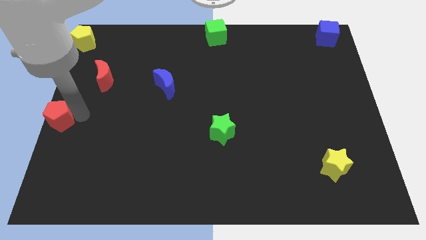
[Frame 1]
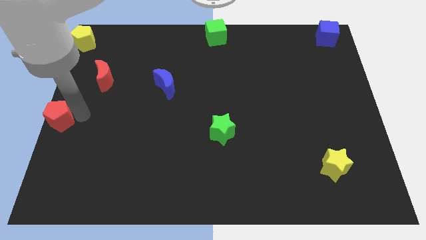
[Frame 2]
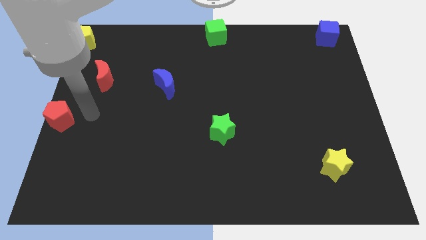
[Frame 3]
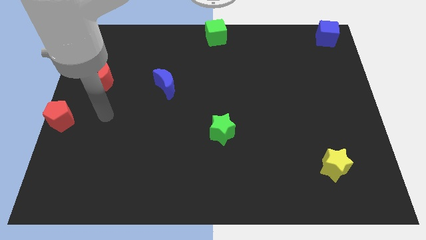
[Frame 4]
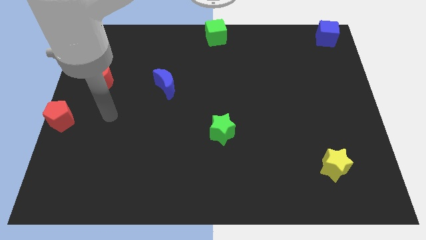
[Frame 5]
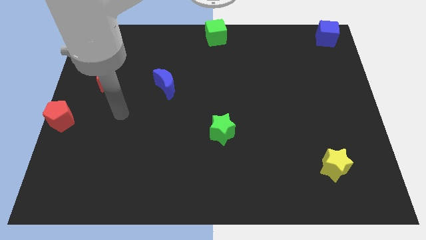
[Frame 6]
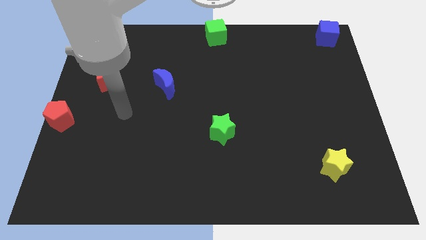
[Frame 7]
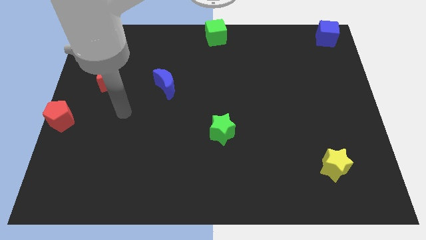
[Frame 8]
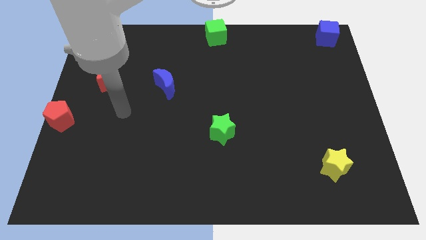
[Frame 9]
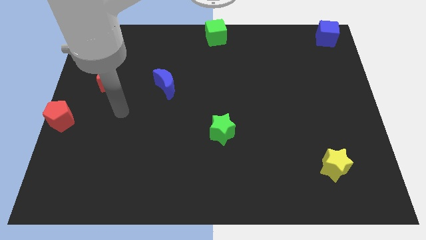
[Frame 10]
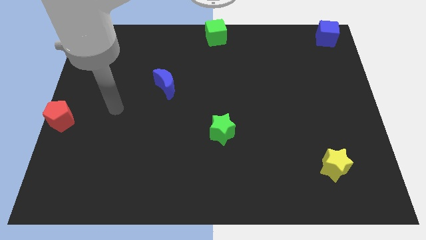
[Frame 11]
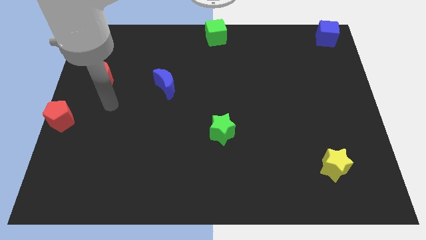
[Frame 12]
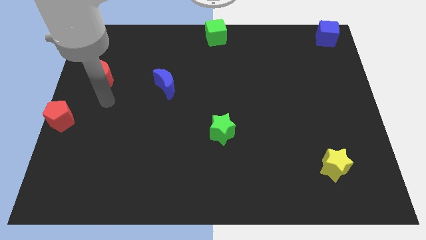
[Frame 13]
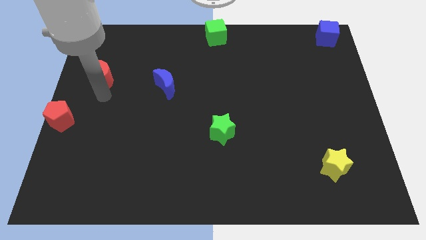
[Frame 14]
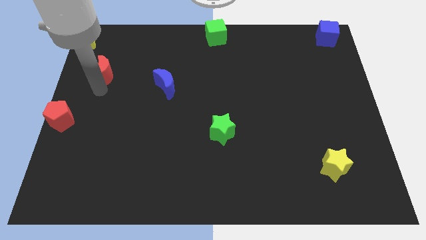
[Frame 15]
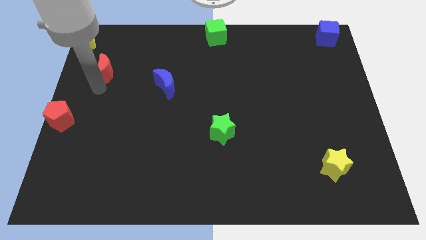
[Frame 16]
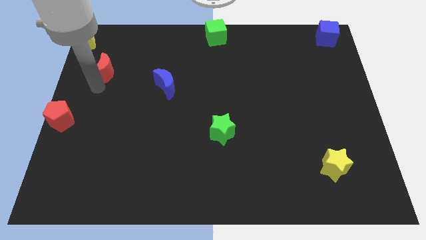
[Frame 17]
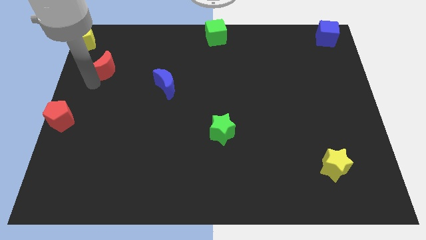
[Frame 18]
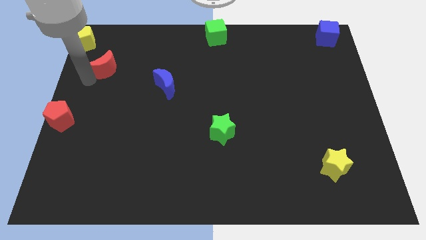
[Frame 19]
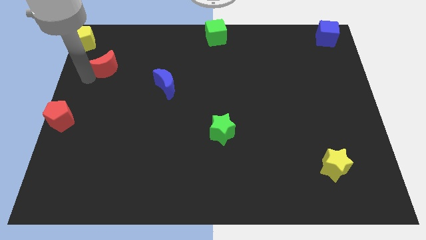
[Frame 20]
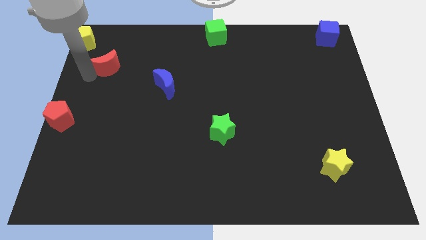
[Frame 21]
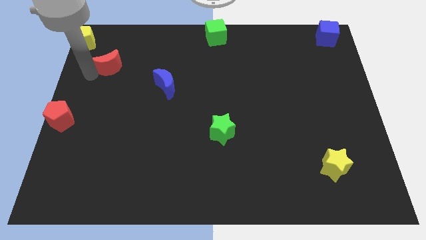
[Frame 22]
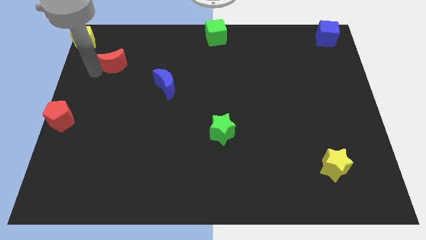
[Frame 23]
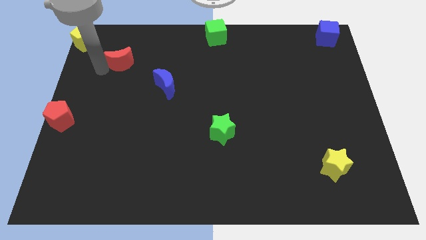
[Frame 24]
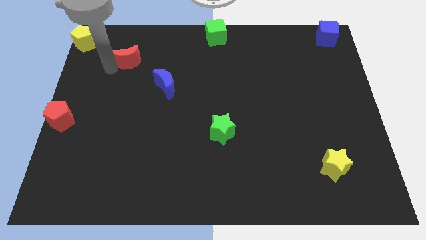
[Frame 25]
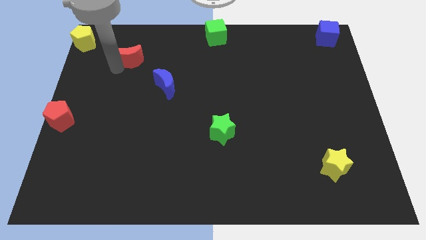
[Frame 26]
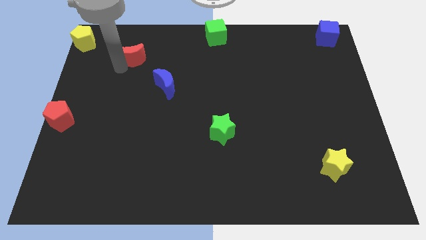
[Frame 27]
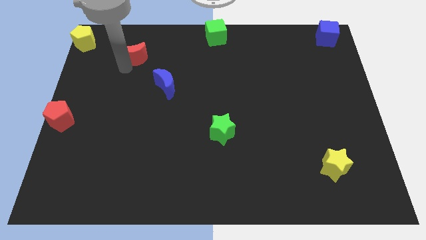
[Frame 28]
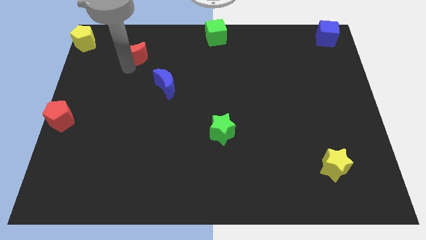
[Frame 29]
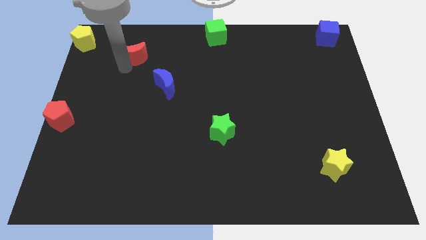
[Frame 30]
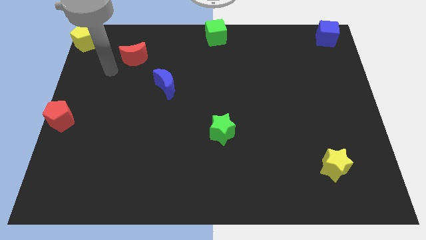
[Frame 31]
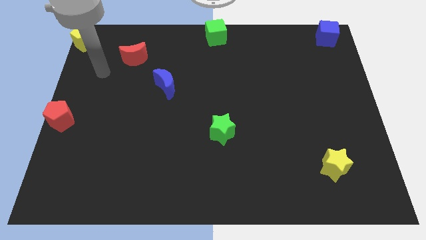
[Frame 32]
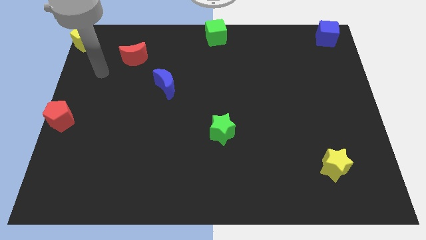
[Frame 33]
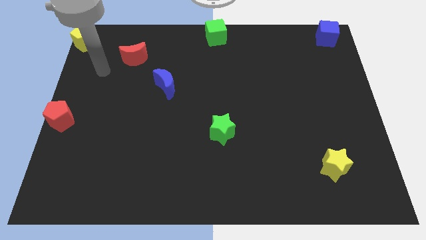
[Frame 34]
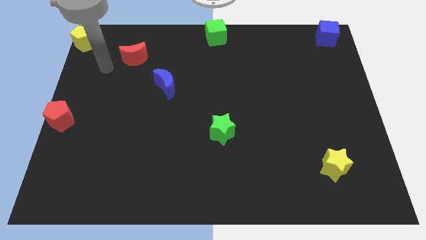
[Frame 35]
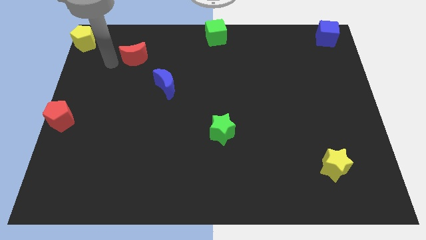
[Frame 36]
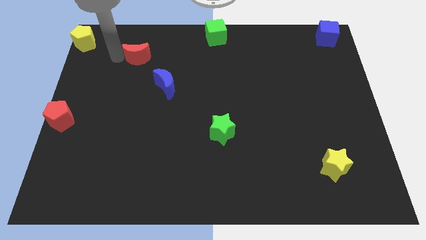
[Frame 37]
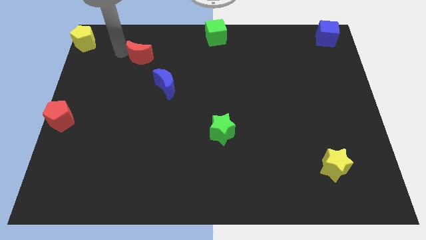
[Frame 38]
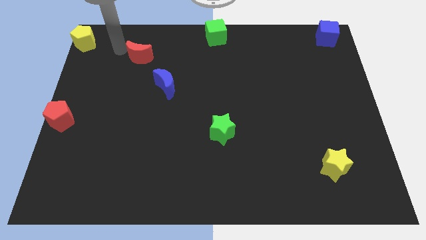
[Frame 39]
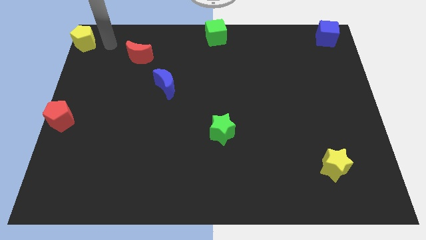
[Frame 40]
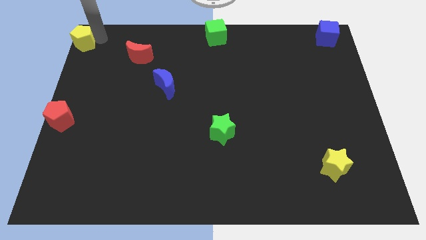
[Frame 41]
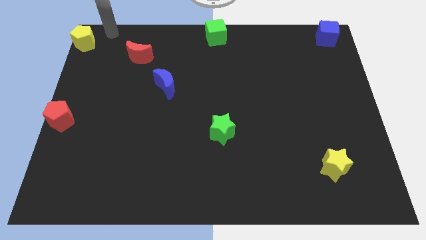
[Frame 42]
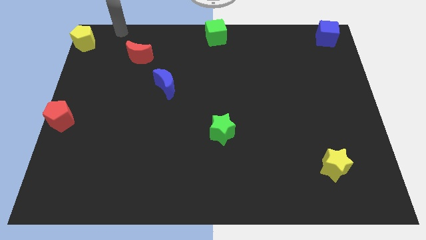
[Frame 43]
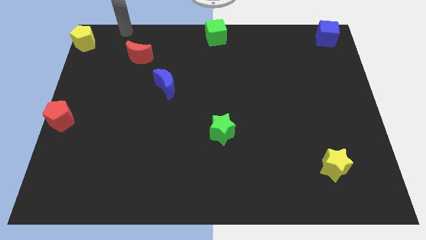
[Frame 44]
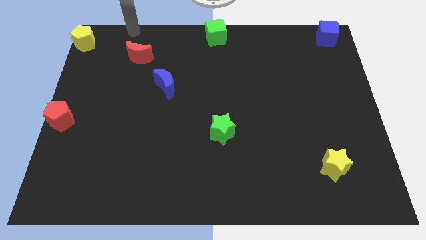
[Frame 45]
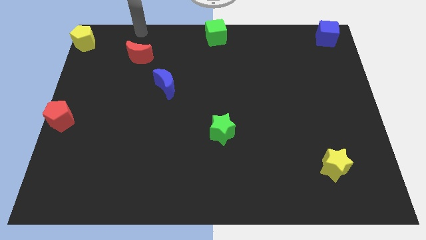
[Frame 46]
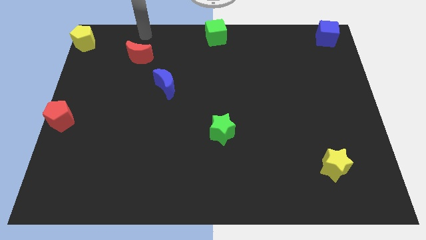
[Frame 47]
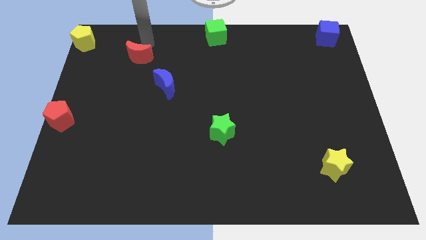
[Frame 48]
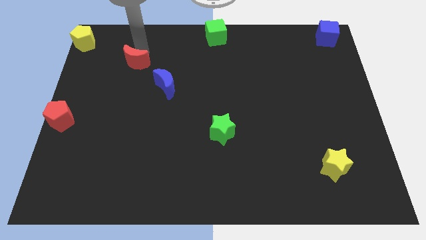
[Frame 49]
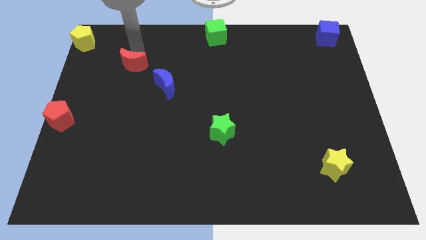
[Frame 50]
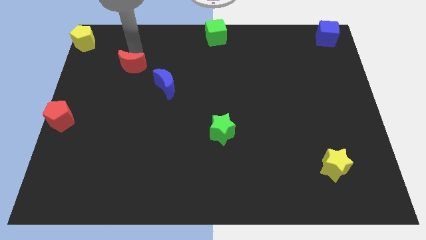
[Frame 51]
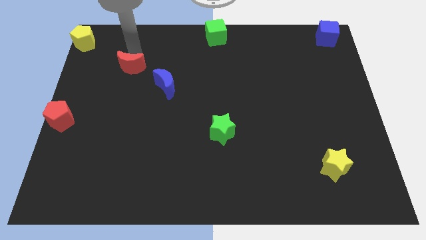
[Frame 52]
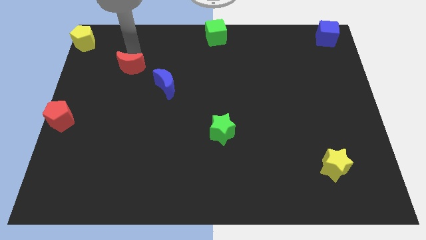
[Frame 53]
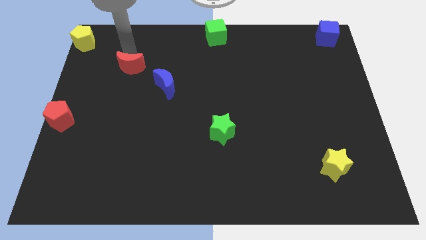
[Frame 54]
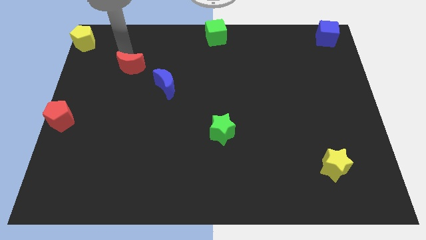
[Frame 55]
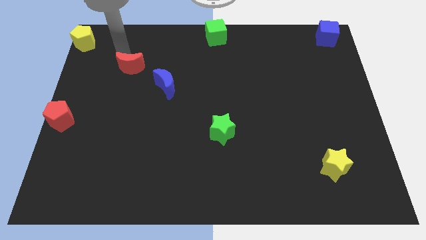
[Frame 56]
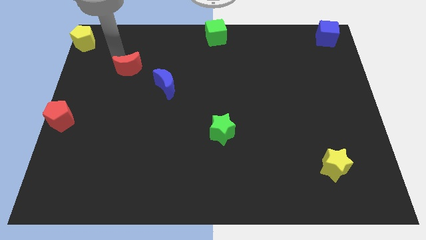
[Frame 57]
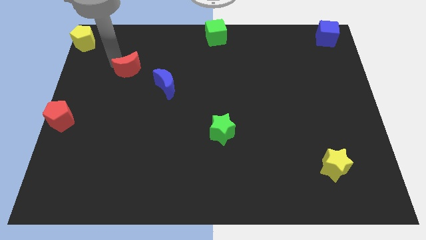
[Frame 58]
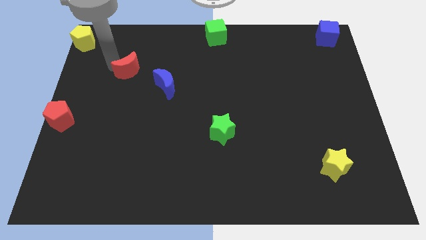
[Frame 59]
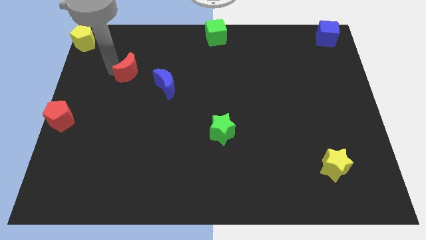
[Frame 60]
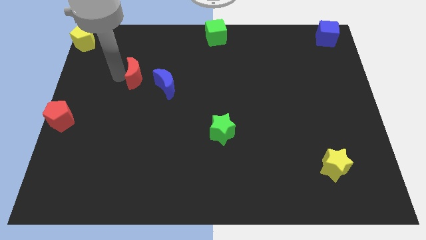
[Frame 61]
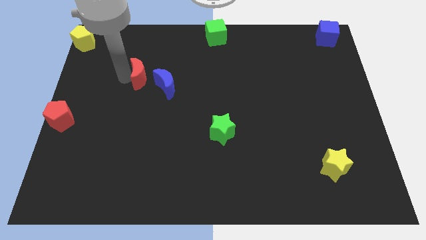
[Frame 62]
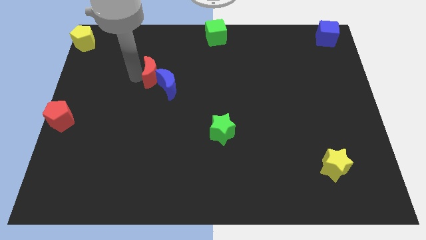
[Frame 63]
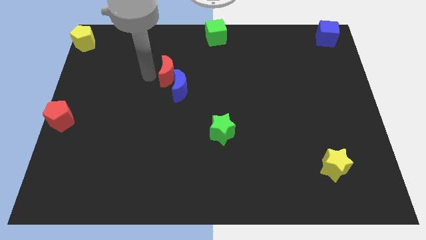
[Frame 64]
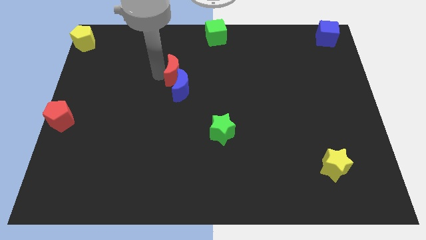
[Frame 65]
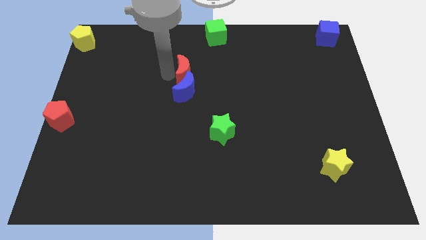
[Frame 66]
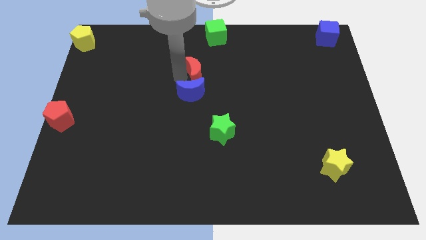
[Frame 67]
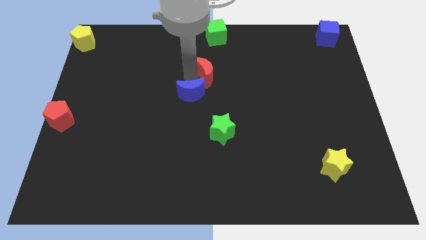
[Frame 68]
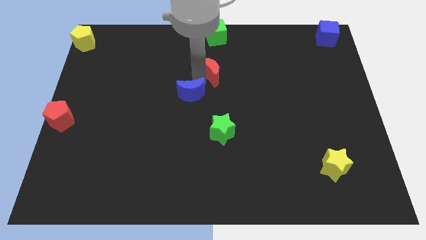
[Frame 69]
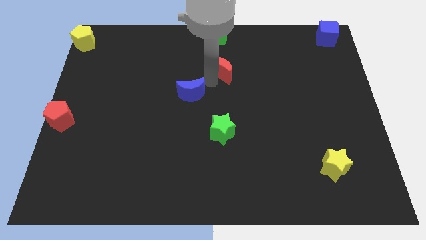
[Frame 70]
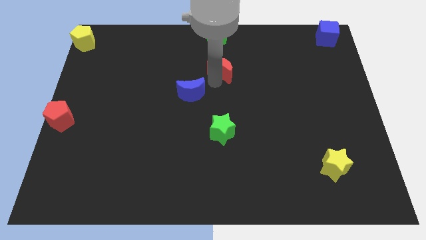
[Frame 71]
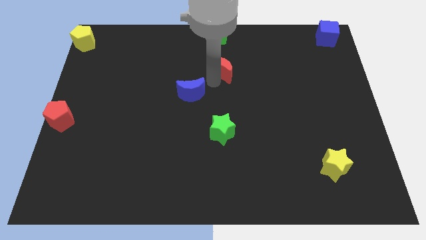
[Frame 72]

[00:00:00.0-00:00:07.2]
push the red crescent to the bottom of the green cube

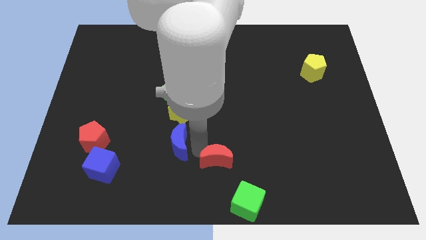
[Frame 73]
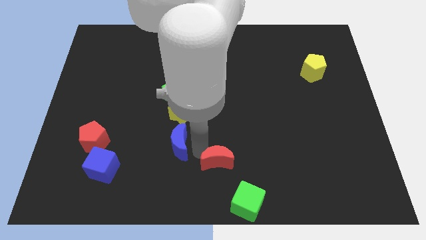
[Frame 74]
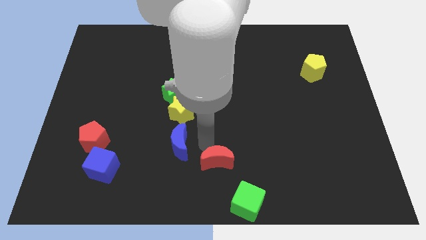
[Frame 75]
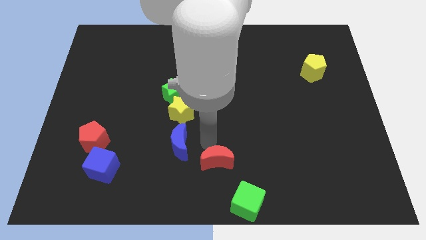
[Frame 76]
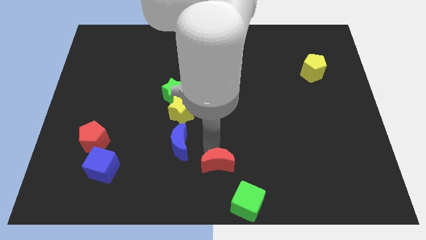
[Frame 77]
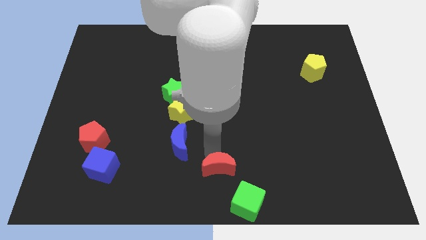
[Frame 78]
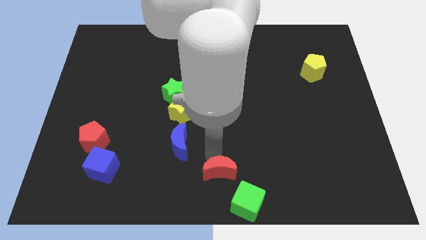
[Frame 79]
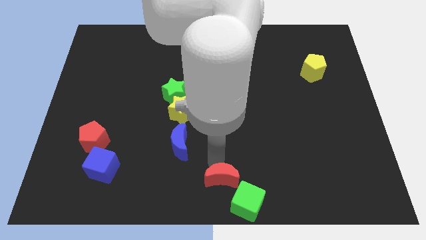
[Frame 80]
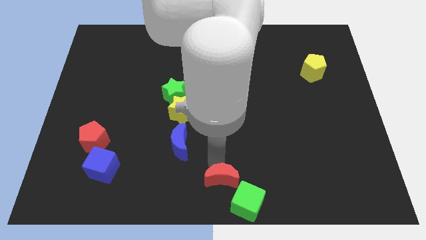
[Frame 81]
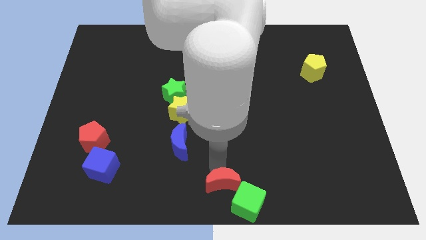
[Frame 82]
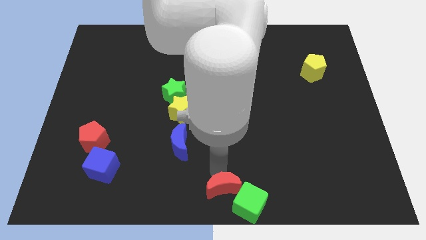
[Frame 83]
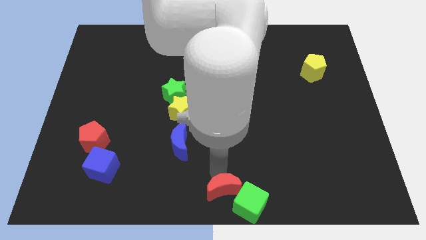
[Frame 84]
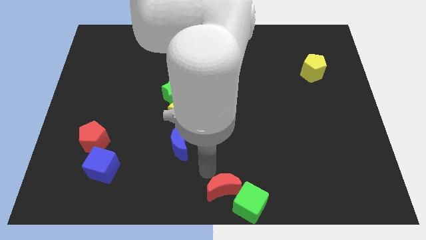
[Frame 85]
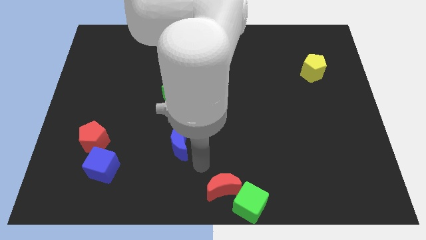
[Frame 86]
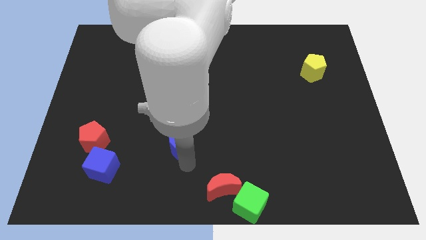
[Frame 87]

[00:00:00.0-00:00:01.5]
move red moon towards bottom center

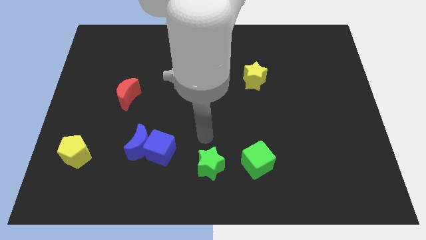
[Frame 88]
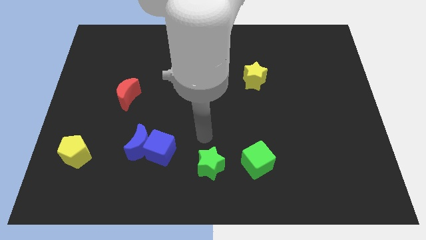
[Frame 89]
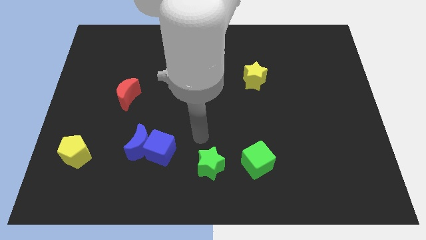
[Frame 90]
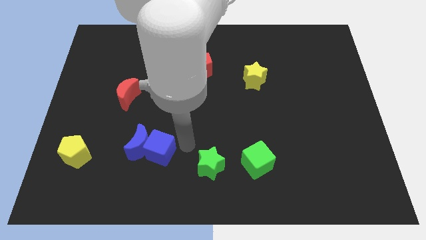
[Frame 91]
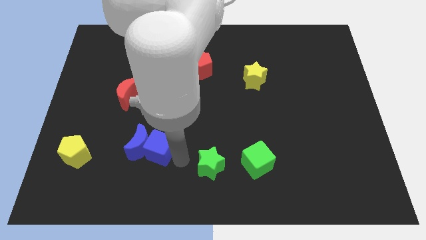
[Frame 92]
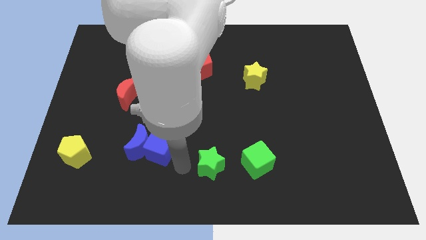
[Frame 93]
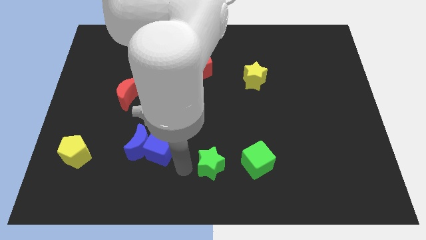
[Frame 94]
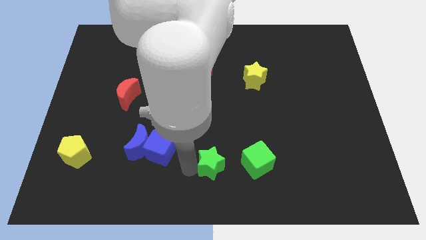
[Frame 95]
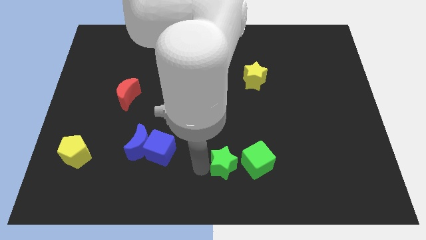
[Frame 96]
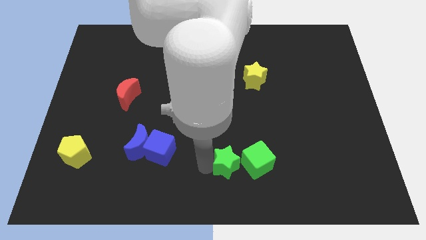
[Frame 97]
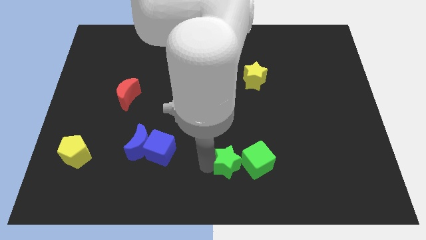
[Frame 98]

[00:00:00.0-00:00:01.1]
move the green star into the green cube
